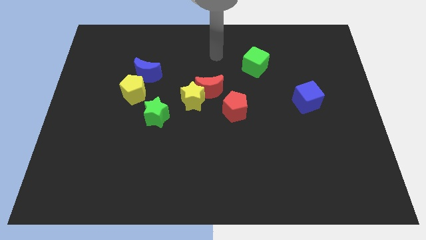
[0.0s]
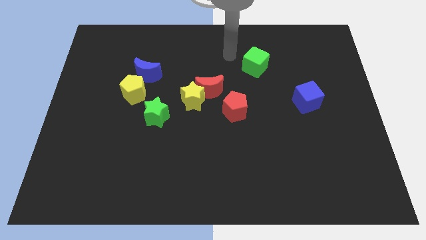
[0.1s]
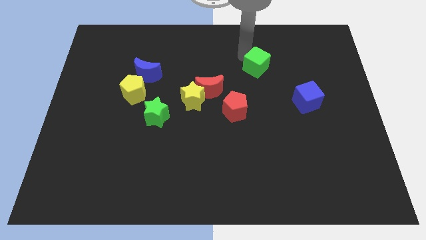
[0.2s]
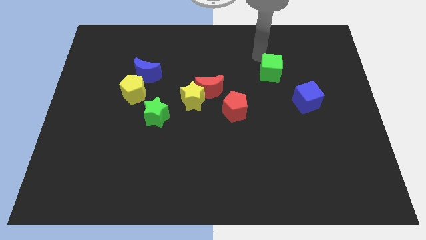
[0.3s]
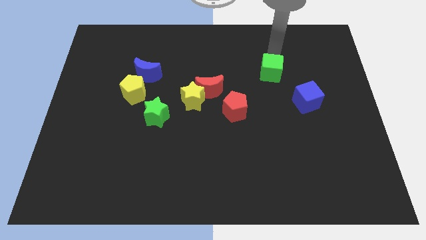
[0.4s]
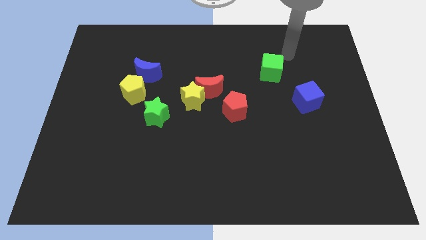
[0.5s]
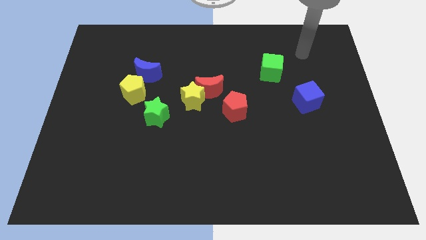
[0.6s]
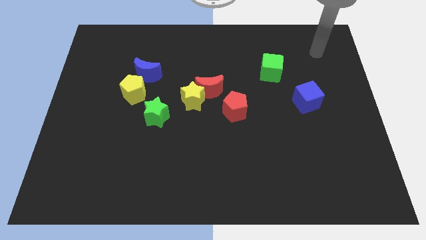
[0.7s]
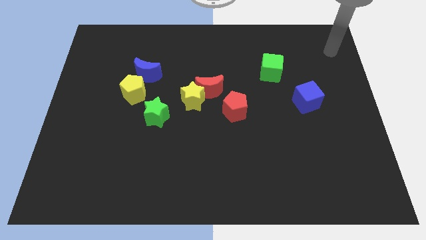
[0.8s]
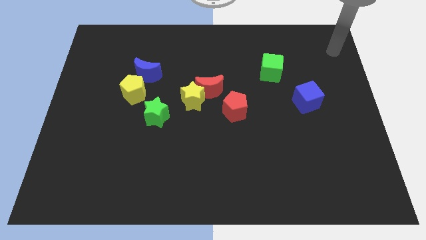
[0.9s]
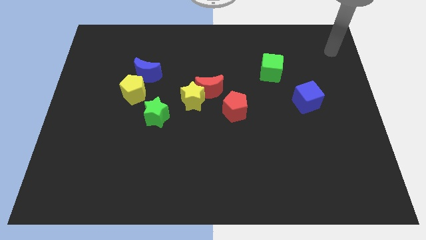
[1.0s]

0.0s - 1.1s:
touch the top side of the green cube

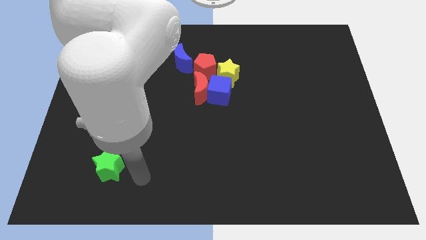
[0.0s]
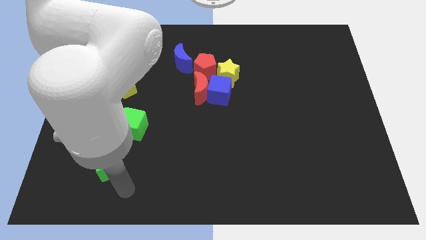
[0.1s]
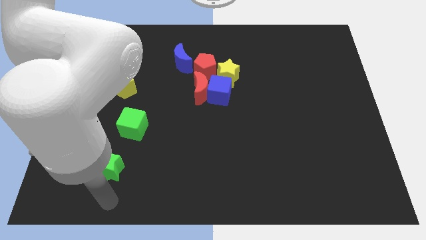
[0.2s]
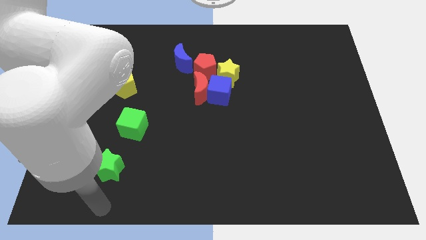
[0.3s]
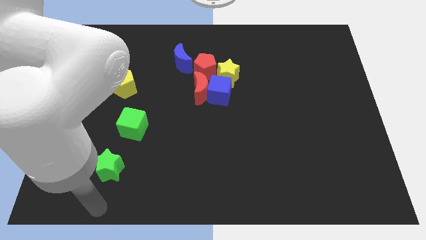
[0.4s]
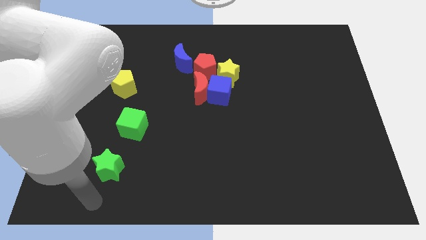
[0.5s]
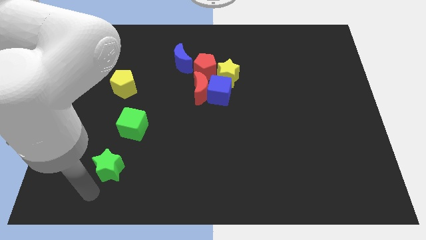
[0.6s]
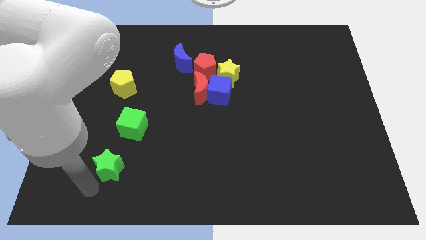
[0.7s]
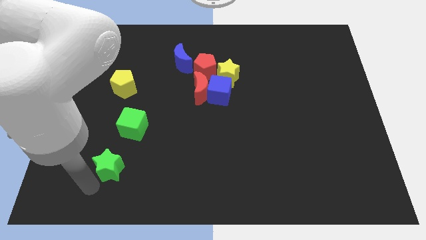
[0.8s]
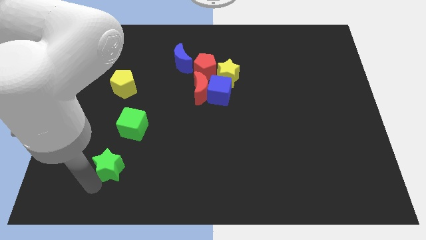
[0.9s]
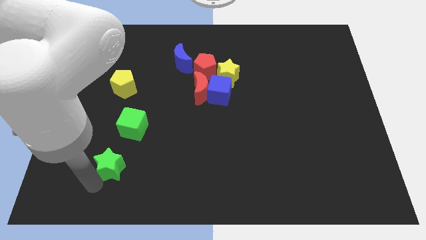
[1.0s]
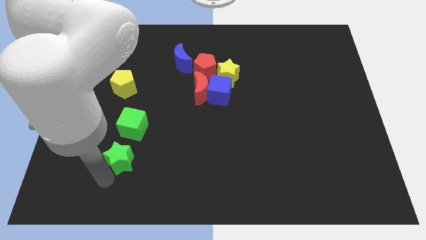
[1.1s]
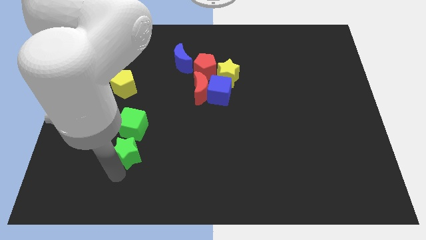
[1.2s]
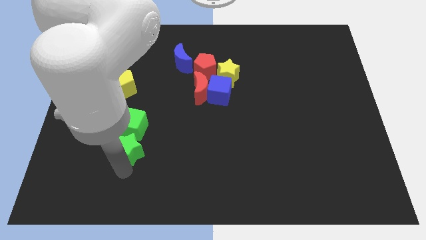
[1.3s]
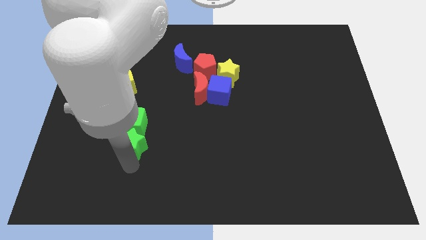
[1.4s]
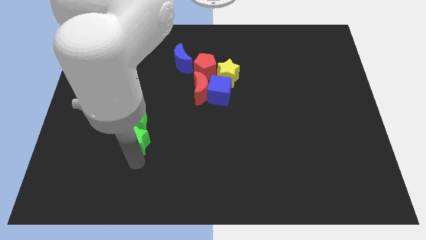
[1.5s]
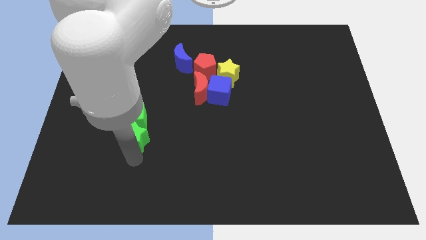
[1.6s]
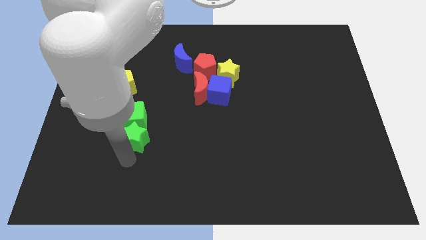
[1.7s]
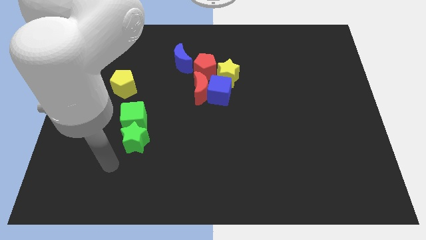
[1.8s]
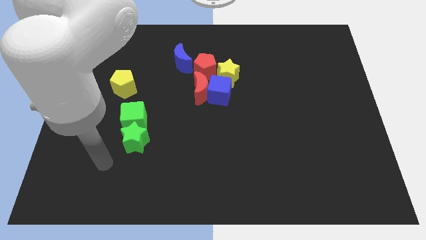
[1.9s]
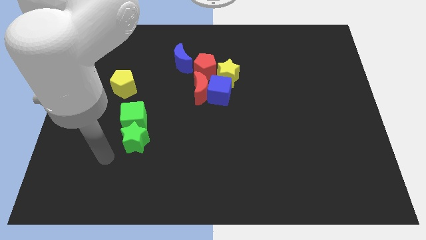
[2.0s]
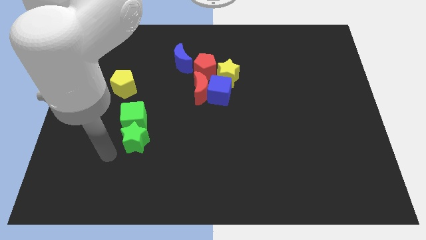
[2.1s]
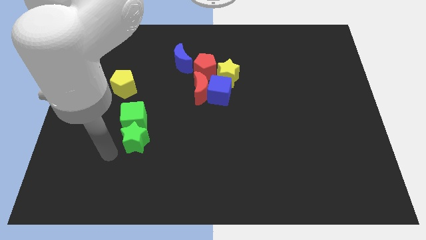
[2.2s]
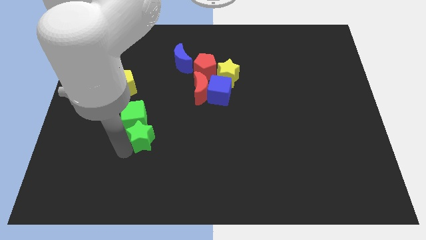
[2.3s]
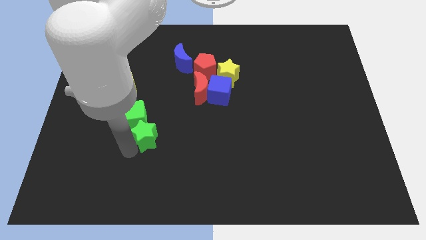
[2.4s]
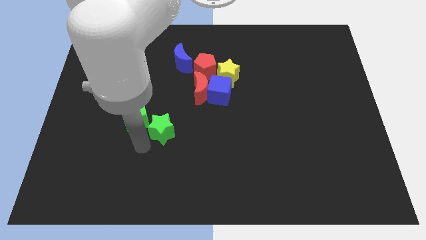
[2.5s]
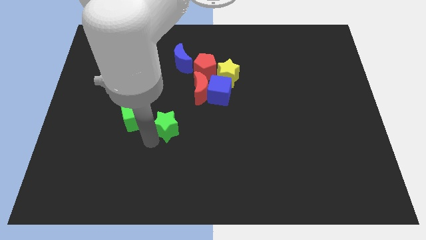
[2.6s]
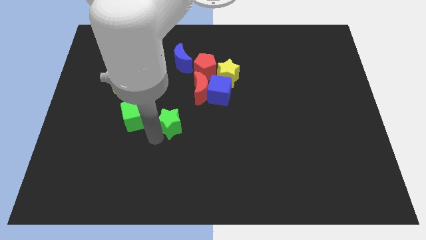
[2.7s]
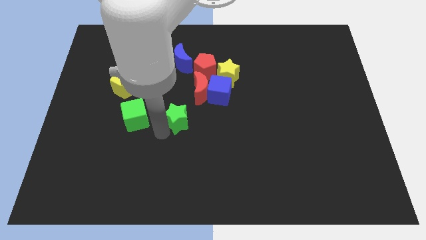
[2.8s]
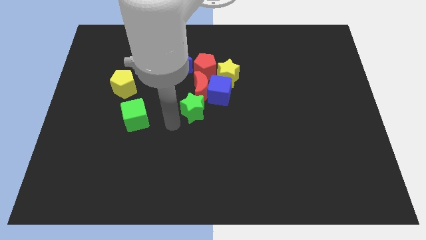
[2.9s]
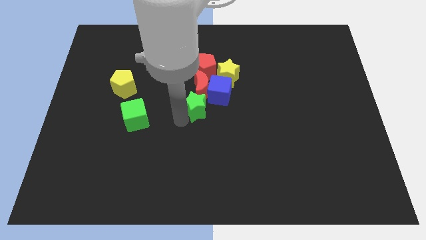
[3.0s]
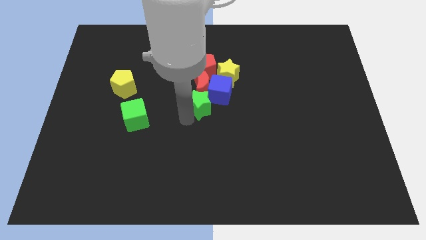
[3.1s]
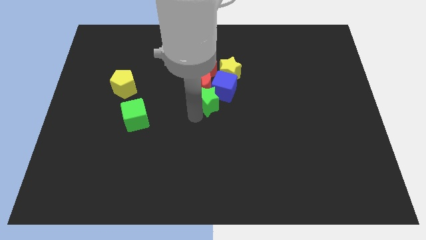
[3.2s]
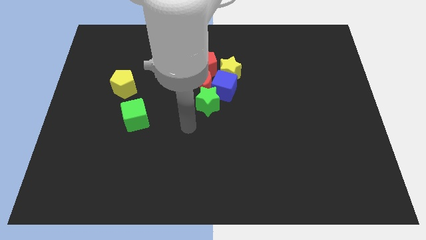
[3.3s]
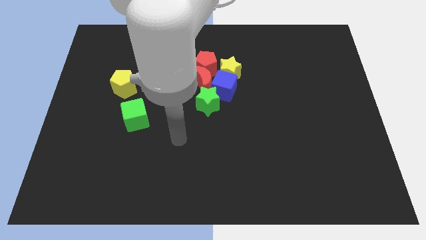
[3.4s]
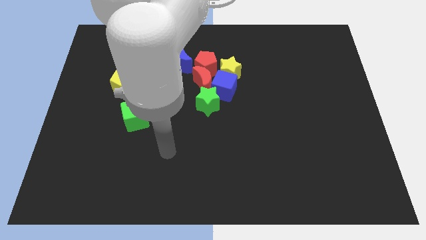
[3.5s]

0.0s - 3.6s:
drag green star into group of blocks

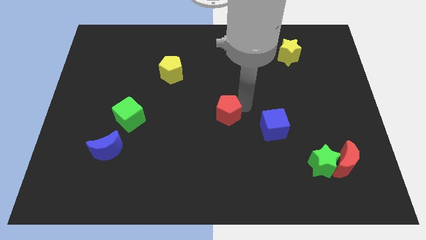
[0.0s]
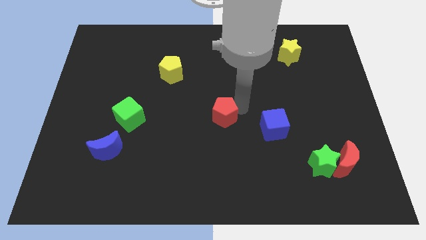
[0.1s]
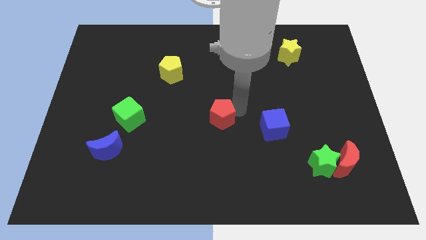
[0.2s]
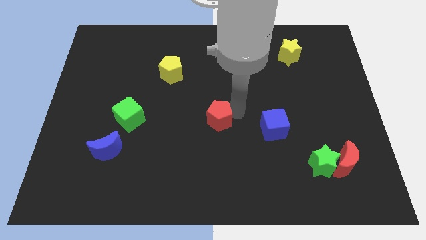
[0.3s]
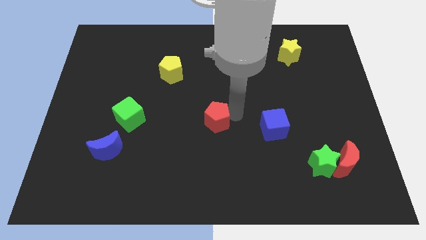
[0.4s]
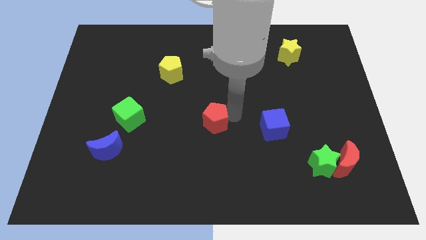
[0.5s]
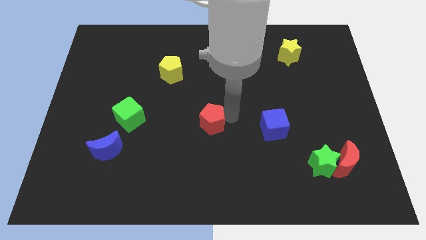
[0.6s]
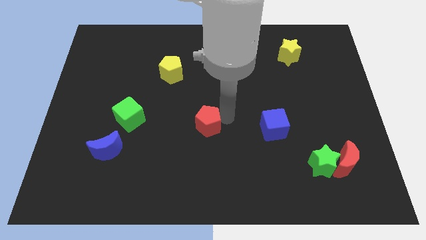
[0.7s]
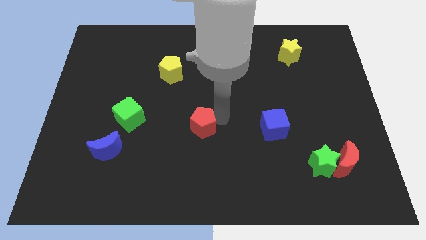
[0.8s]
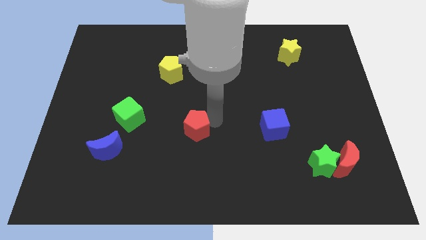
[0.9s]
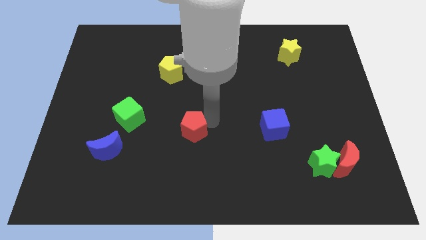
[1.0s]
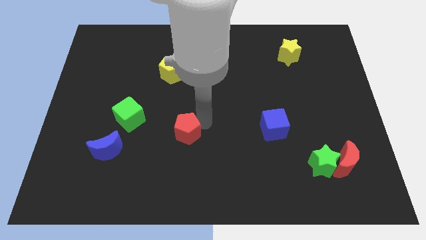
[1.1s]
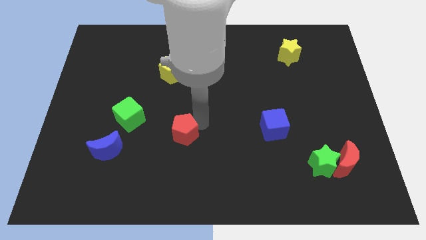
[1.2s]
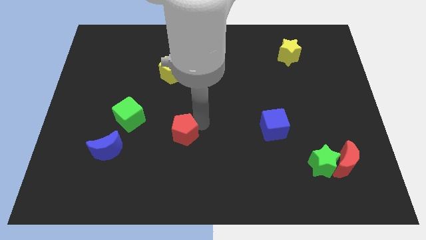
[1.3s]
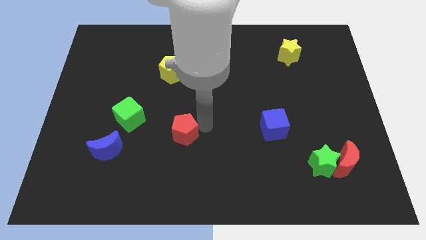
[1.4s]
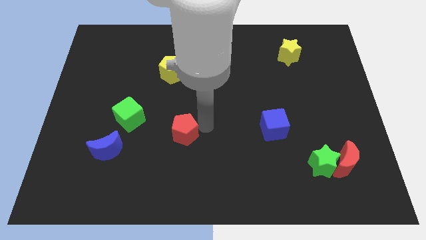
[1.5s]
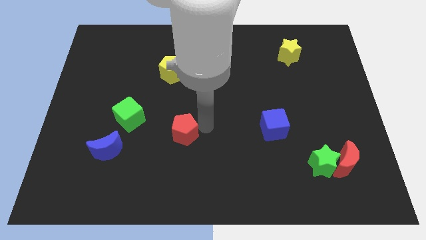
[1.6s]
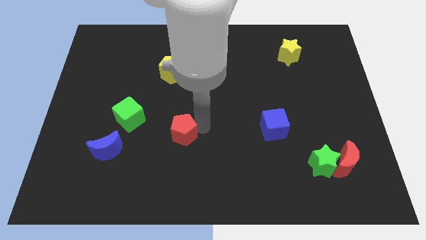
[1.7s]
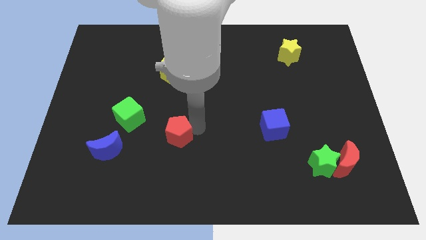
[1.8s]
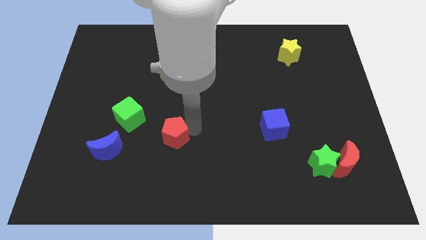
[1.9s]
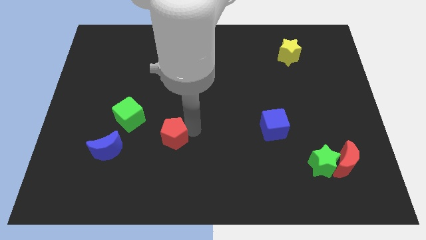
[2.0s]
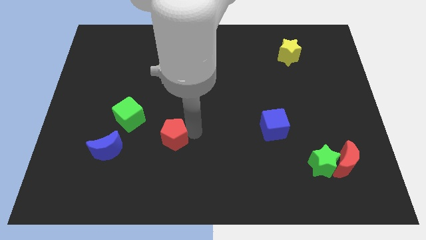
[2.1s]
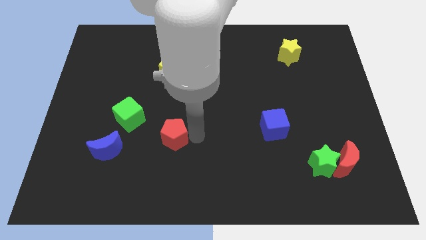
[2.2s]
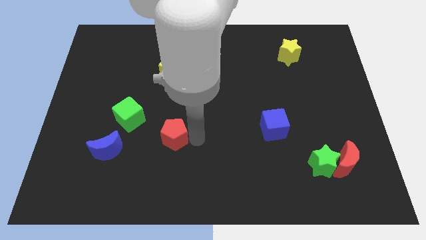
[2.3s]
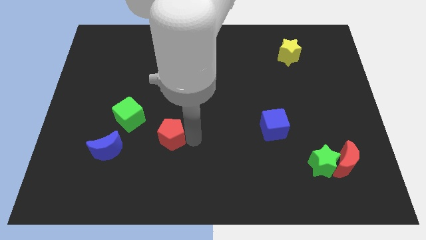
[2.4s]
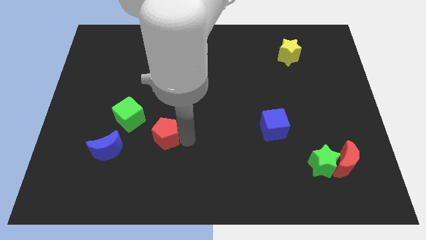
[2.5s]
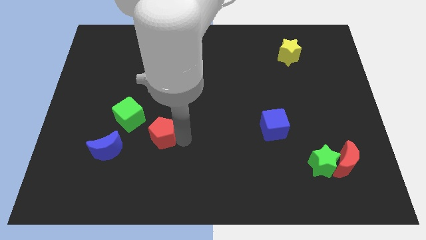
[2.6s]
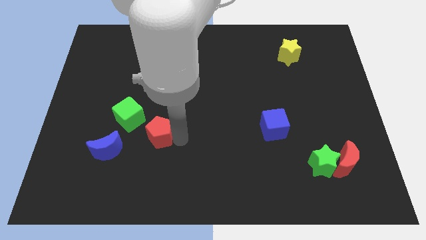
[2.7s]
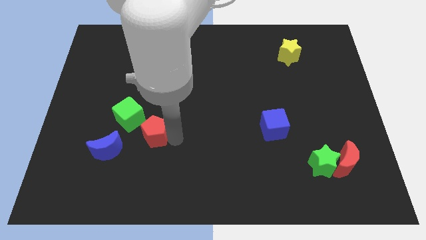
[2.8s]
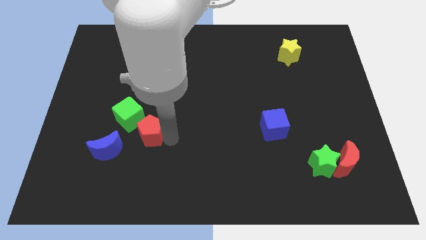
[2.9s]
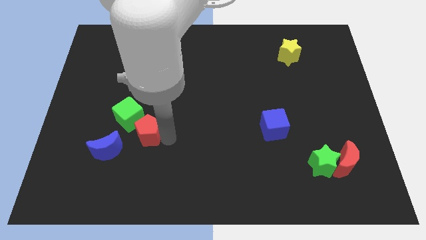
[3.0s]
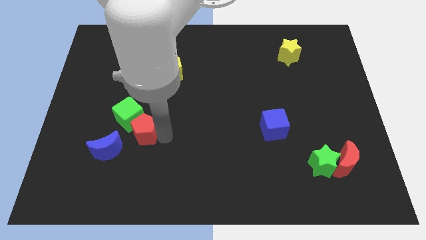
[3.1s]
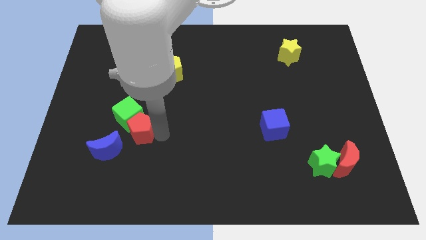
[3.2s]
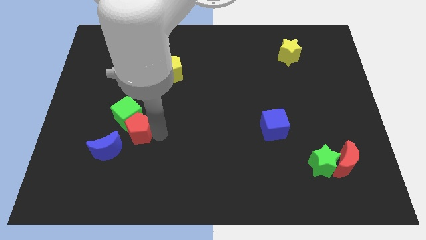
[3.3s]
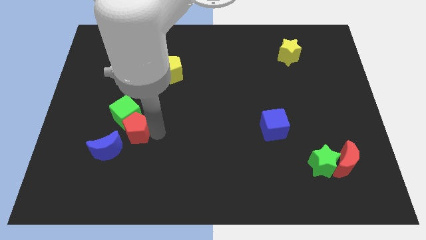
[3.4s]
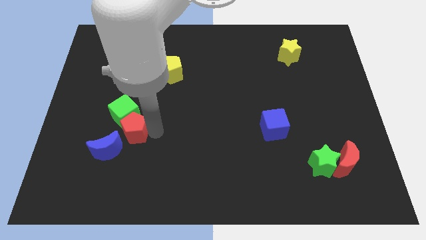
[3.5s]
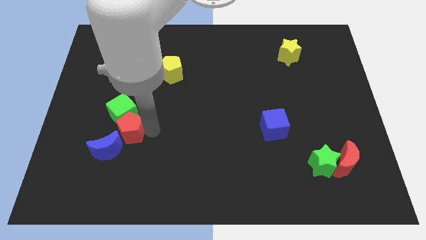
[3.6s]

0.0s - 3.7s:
push red pentagon in to green cube

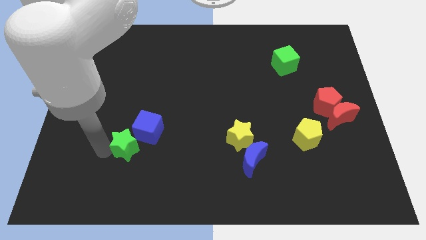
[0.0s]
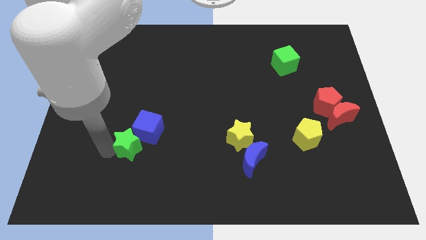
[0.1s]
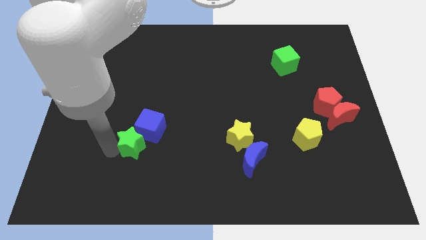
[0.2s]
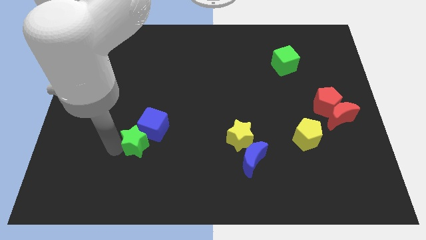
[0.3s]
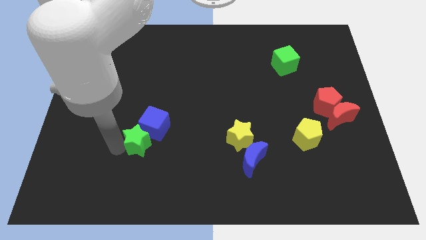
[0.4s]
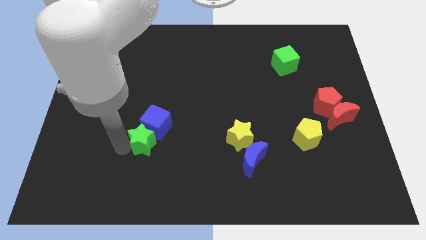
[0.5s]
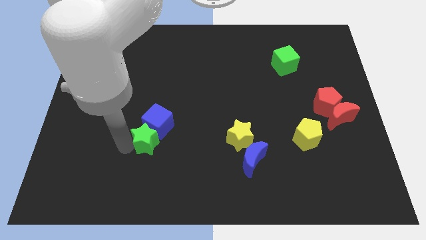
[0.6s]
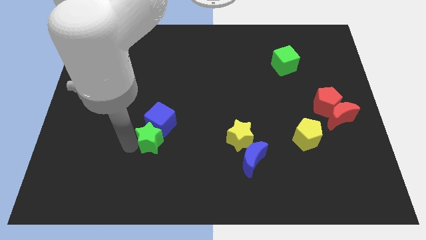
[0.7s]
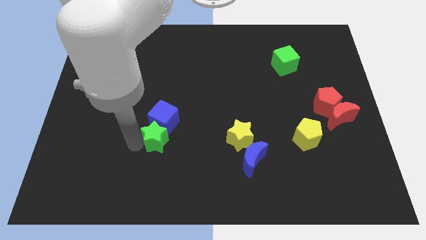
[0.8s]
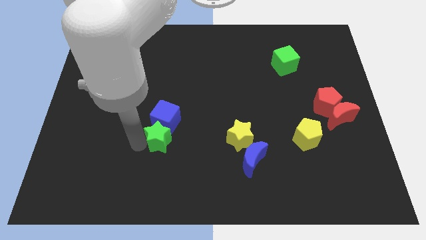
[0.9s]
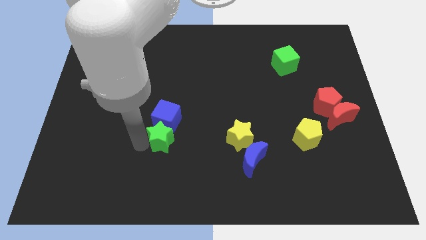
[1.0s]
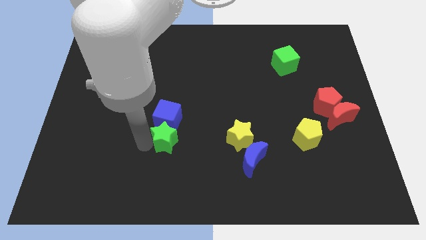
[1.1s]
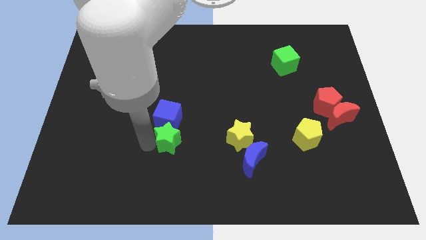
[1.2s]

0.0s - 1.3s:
push green star into blue cube
